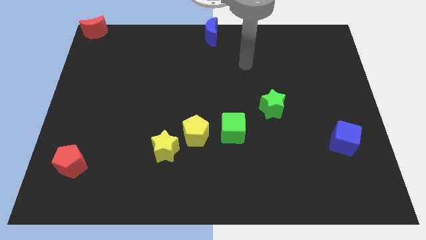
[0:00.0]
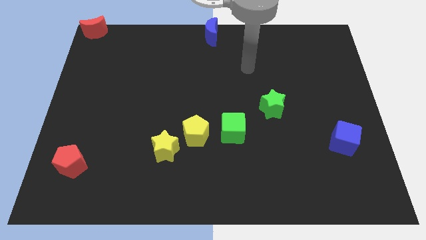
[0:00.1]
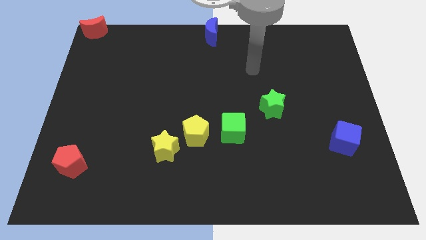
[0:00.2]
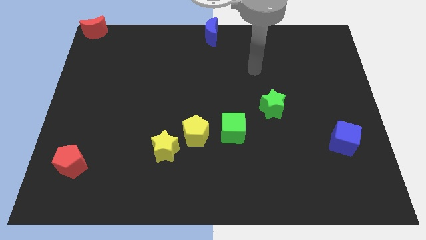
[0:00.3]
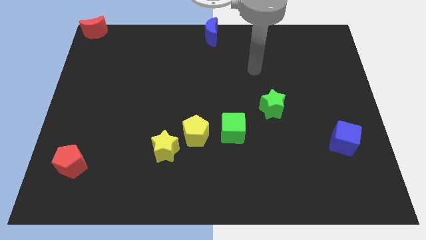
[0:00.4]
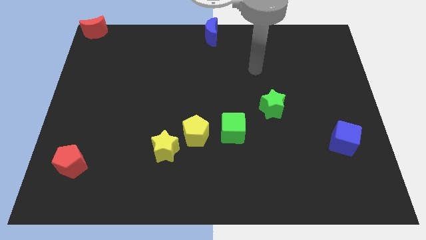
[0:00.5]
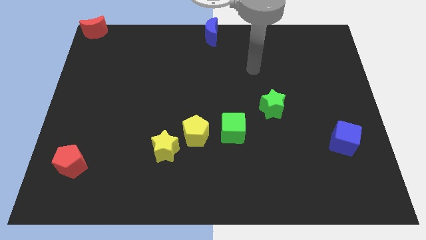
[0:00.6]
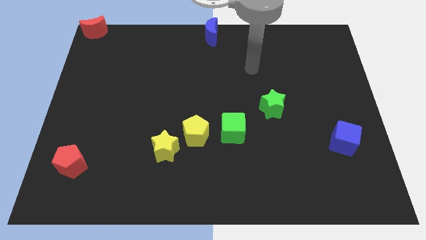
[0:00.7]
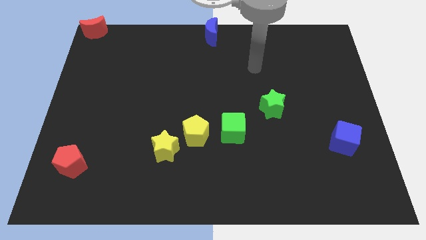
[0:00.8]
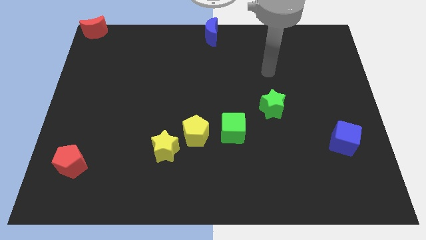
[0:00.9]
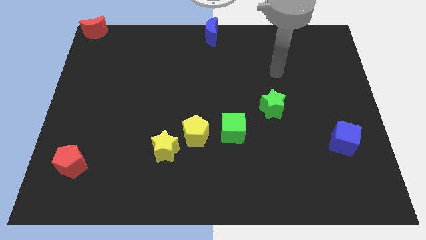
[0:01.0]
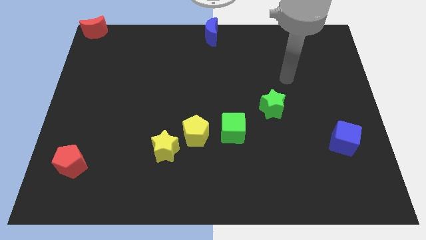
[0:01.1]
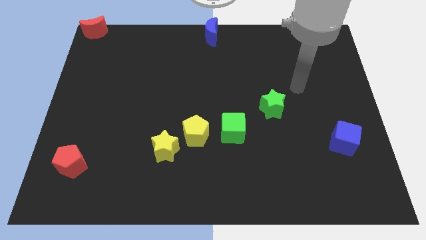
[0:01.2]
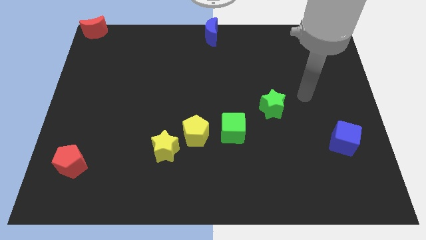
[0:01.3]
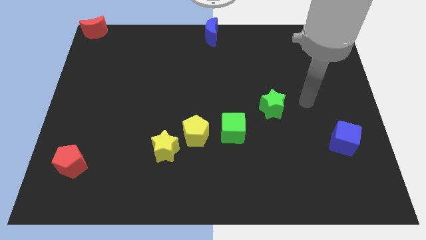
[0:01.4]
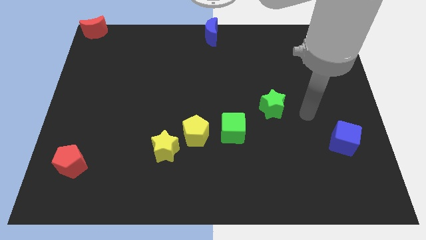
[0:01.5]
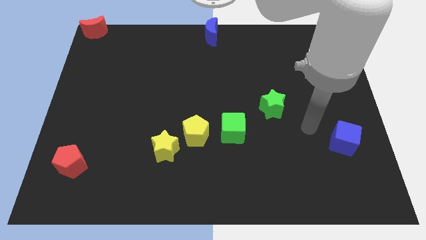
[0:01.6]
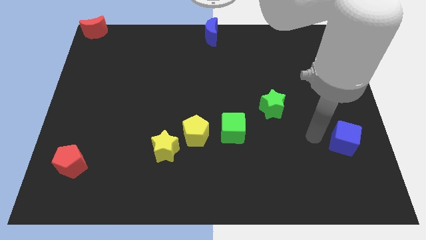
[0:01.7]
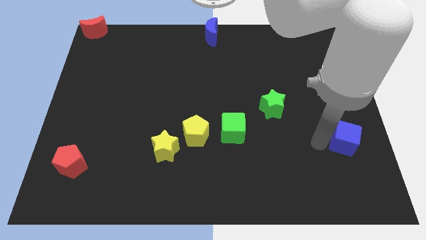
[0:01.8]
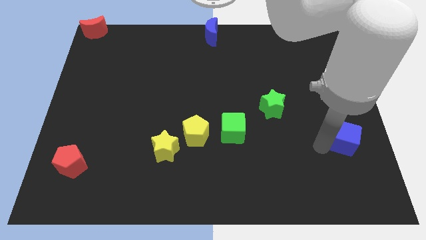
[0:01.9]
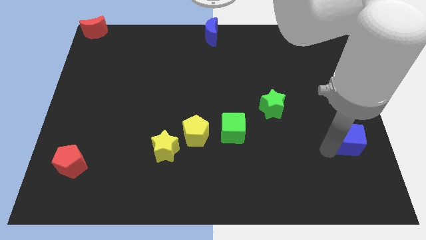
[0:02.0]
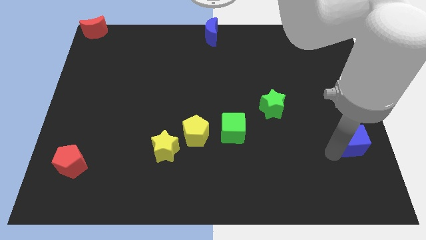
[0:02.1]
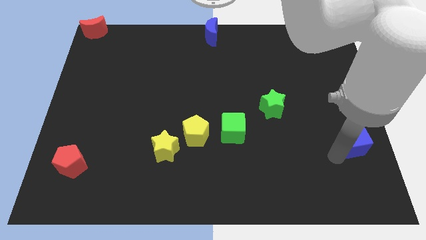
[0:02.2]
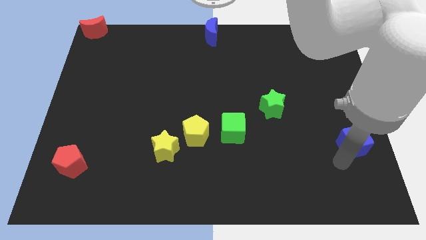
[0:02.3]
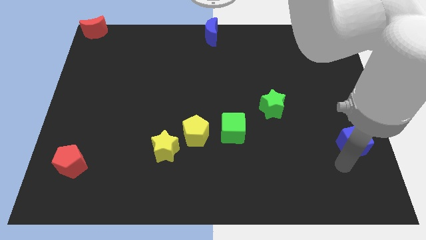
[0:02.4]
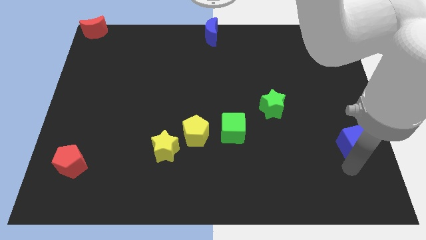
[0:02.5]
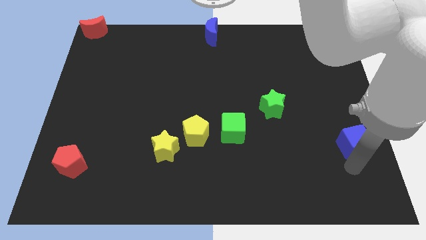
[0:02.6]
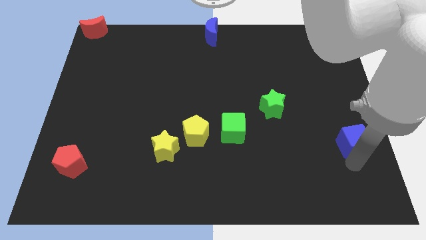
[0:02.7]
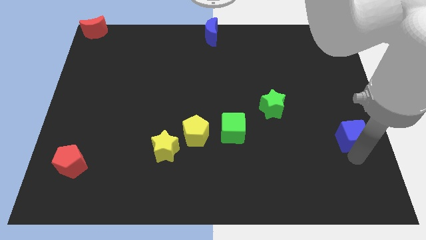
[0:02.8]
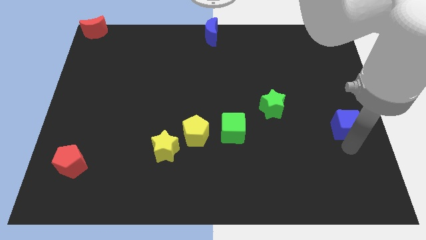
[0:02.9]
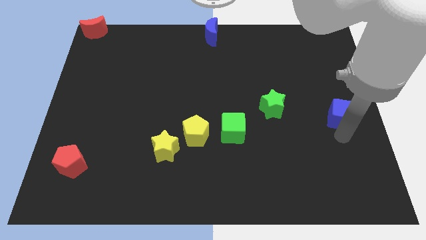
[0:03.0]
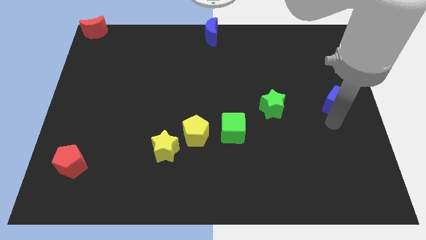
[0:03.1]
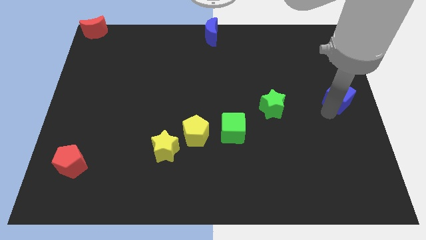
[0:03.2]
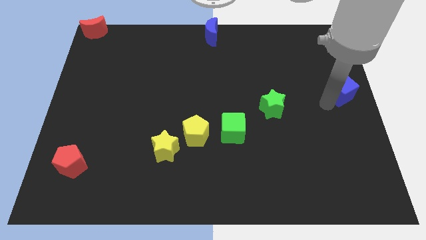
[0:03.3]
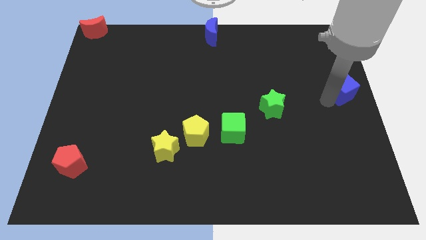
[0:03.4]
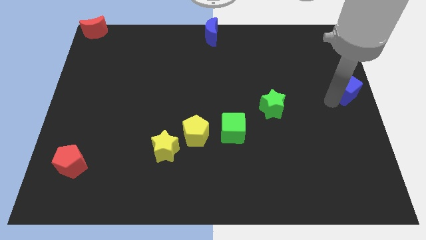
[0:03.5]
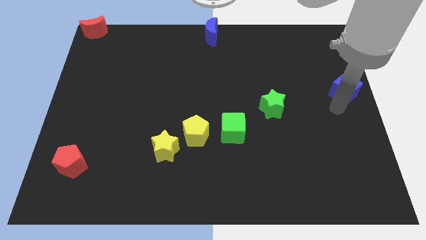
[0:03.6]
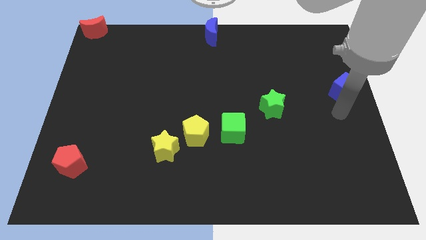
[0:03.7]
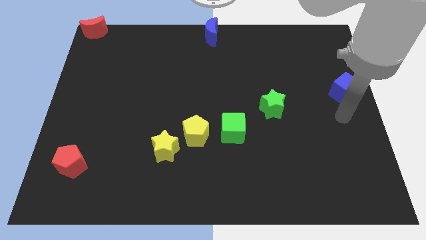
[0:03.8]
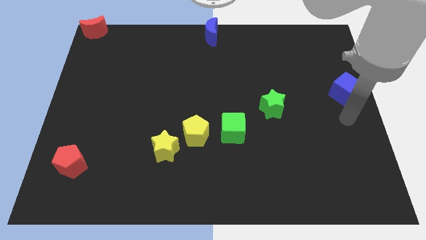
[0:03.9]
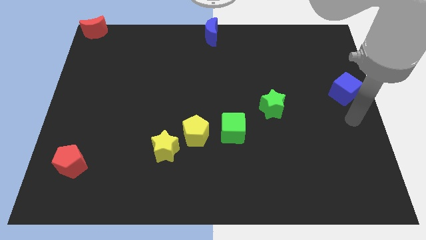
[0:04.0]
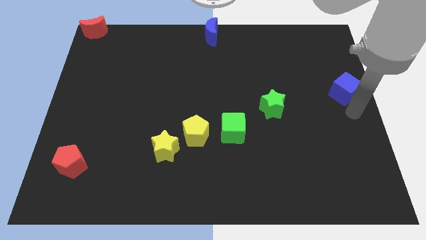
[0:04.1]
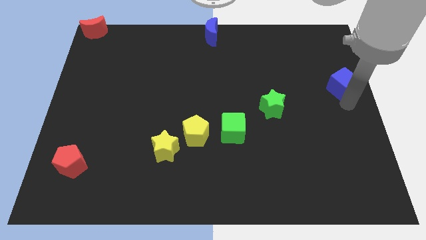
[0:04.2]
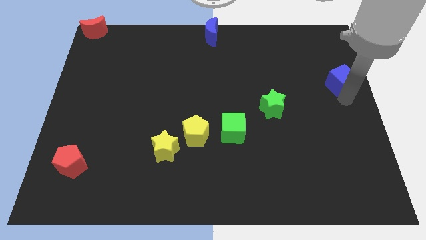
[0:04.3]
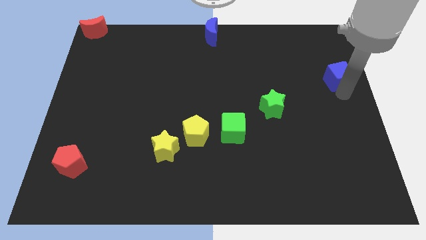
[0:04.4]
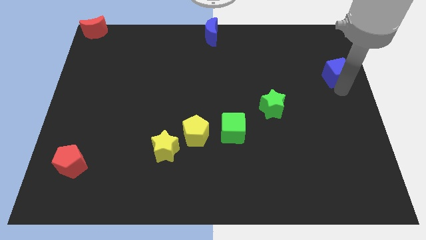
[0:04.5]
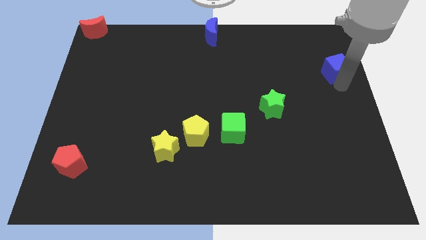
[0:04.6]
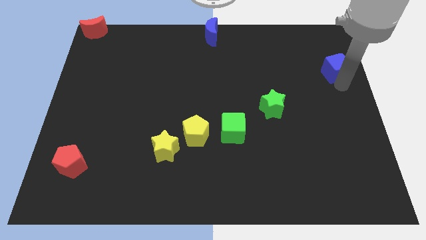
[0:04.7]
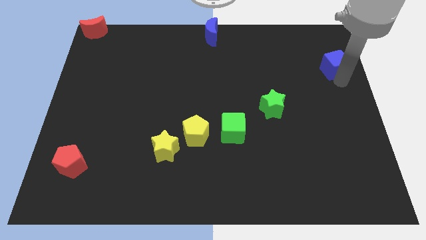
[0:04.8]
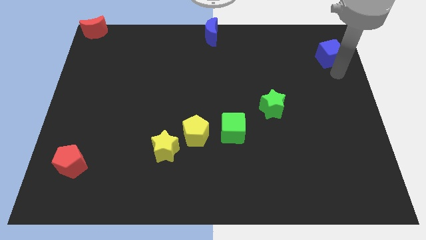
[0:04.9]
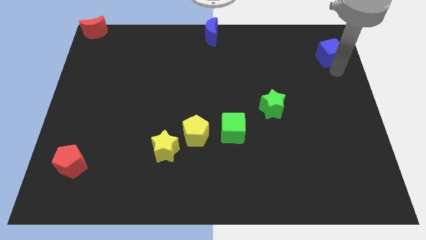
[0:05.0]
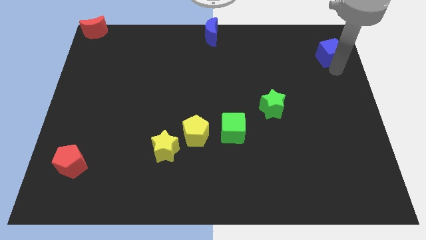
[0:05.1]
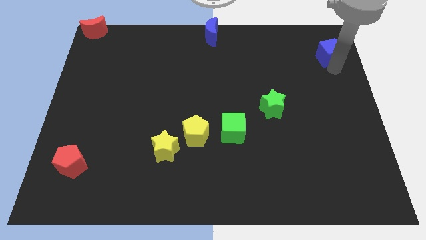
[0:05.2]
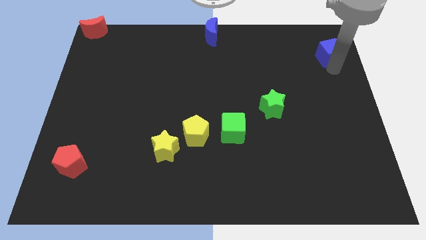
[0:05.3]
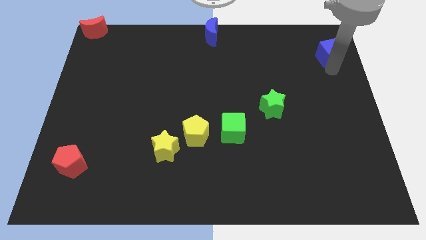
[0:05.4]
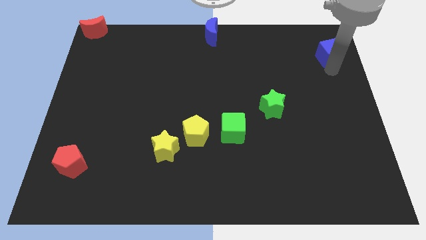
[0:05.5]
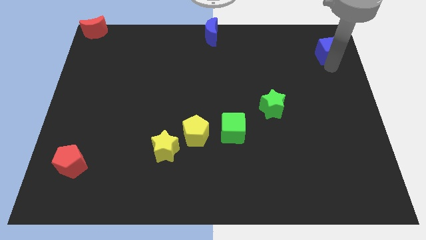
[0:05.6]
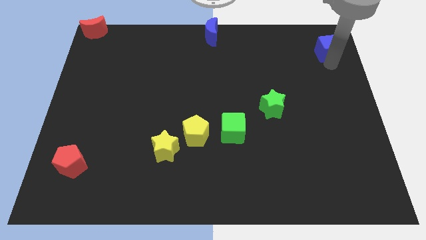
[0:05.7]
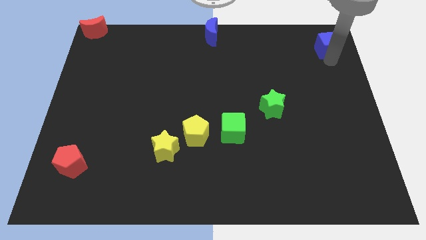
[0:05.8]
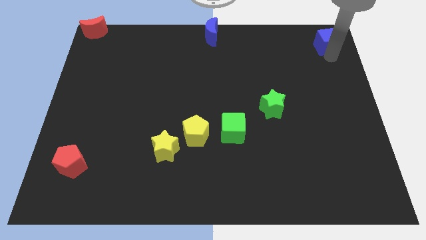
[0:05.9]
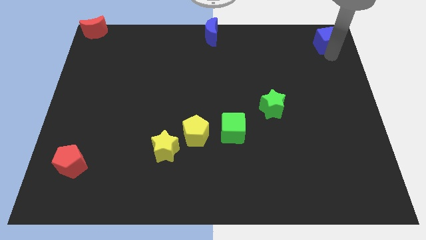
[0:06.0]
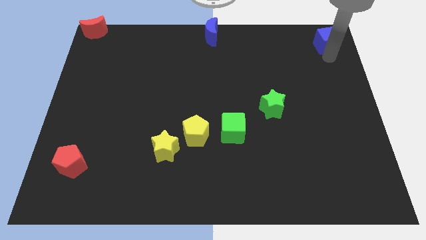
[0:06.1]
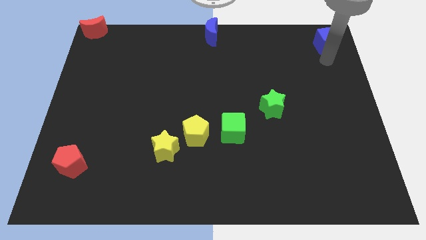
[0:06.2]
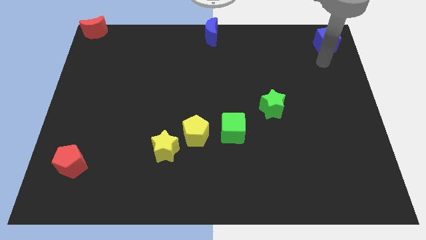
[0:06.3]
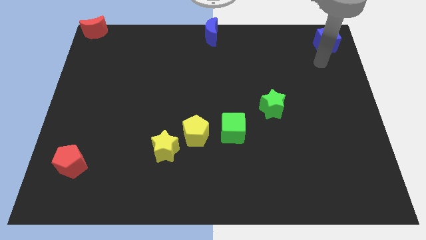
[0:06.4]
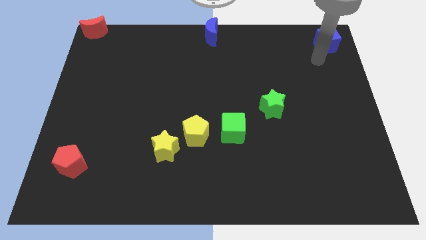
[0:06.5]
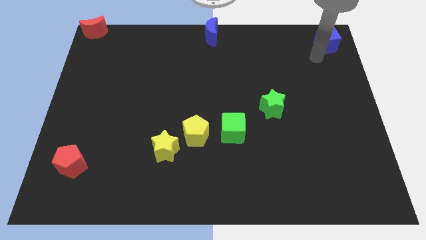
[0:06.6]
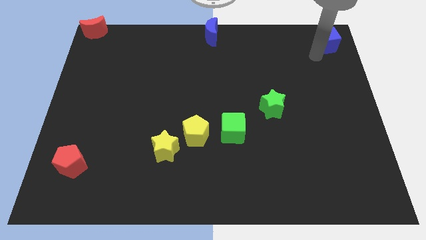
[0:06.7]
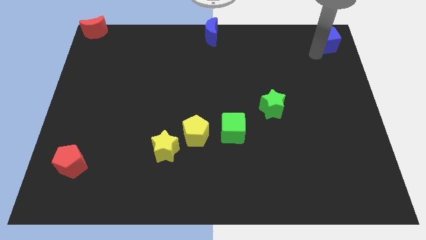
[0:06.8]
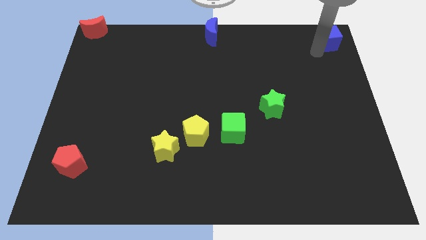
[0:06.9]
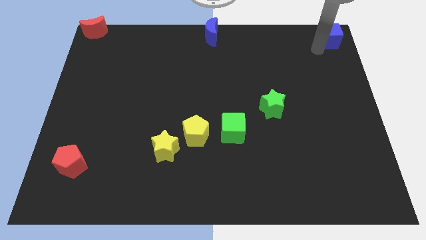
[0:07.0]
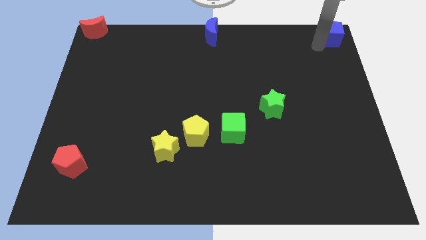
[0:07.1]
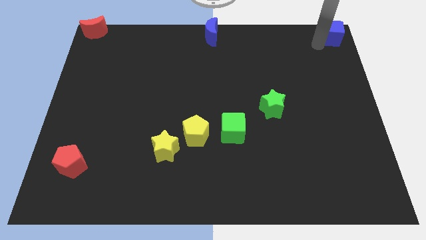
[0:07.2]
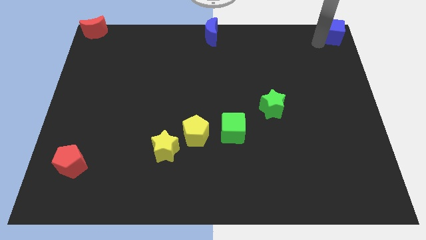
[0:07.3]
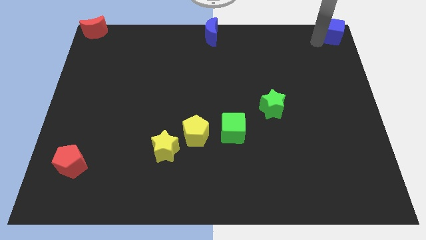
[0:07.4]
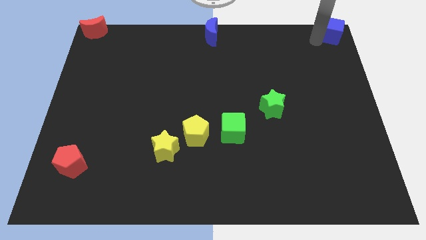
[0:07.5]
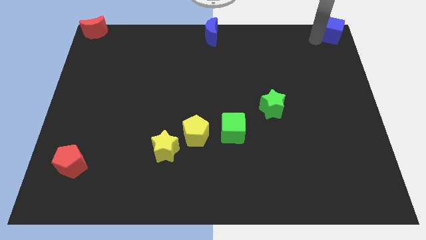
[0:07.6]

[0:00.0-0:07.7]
push blue cube towards top right corner of the board

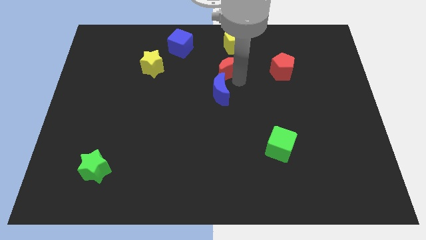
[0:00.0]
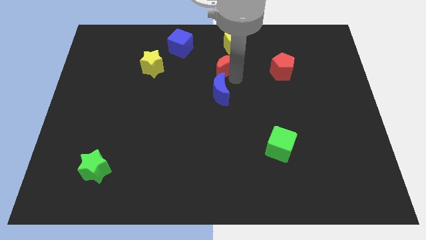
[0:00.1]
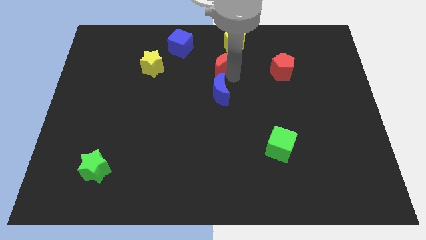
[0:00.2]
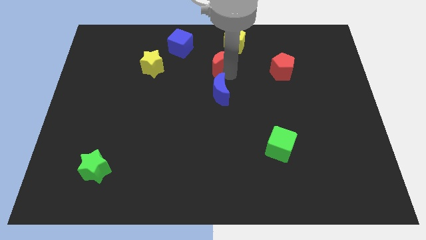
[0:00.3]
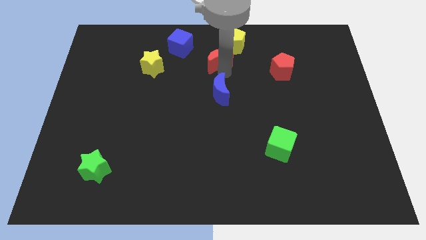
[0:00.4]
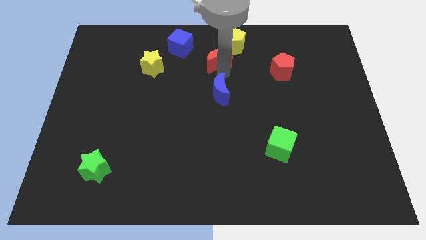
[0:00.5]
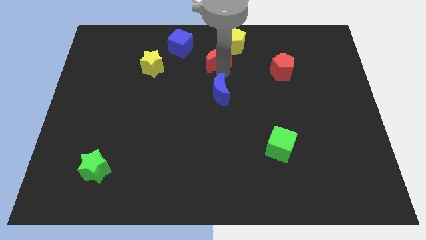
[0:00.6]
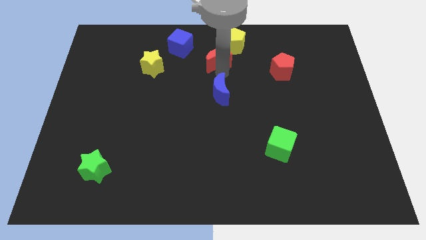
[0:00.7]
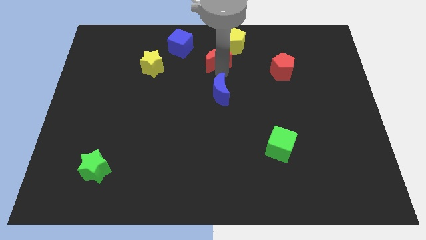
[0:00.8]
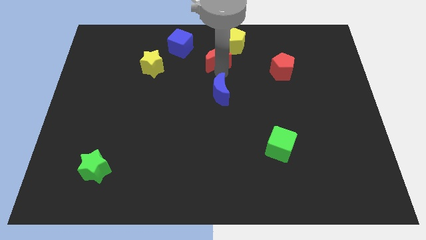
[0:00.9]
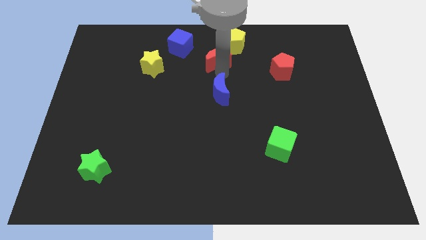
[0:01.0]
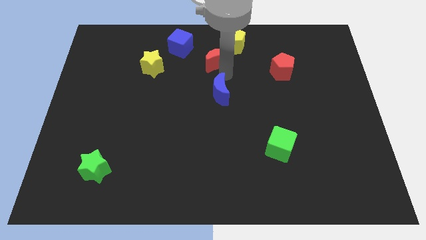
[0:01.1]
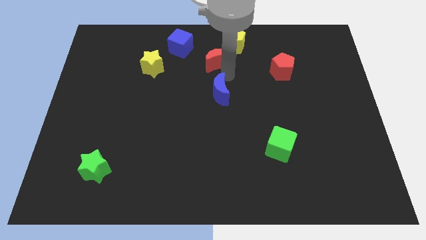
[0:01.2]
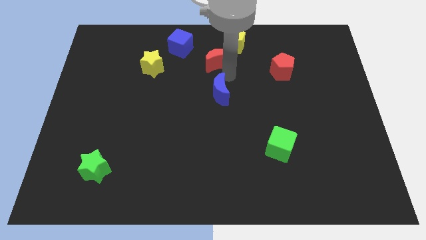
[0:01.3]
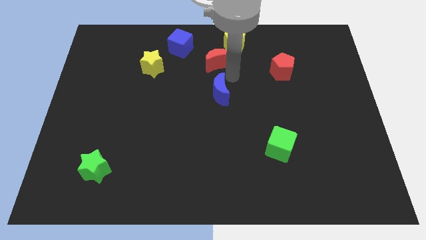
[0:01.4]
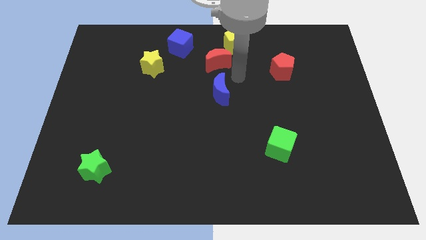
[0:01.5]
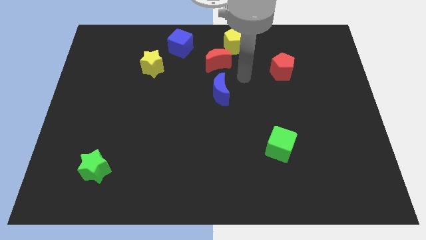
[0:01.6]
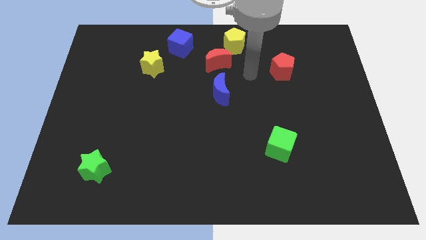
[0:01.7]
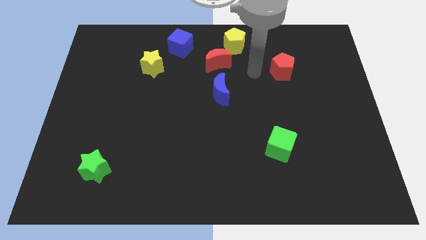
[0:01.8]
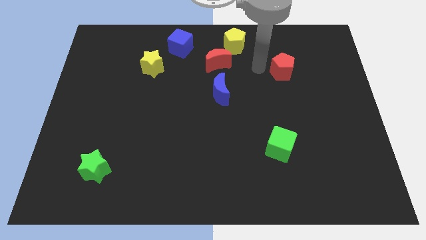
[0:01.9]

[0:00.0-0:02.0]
place the red crescent to the bottom left side of the yellow pentagon
